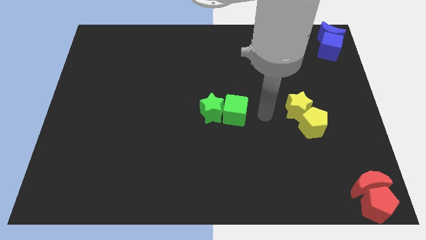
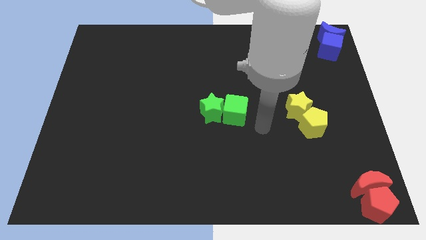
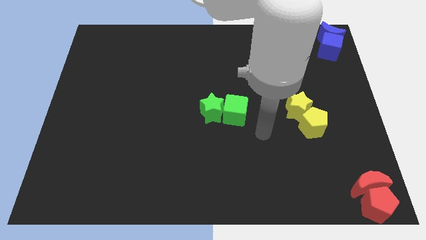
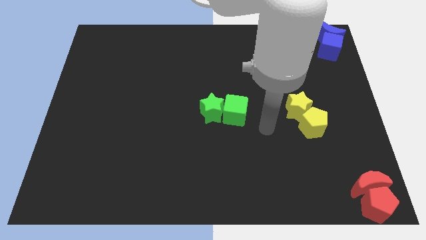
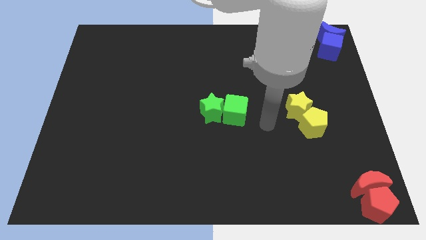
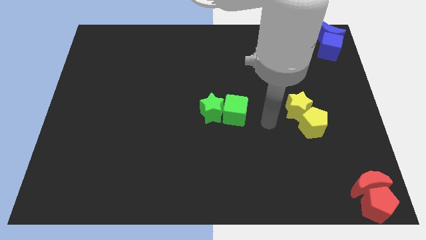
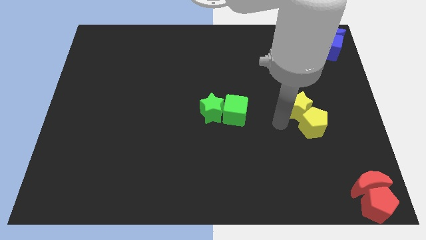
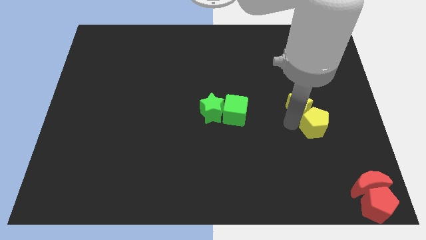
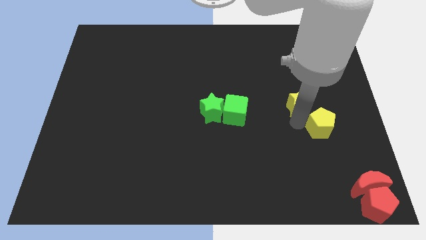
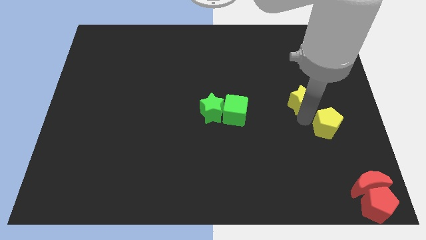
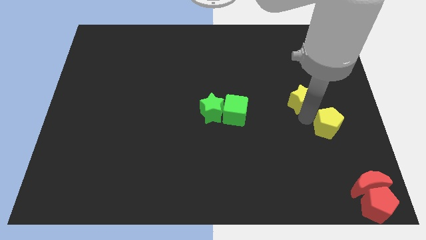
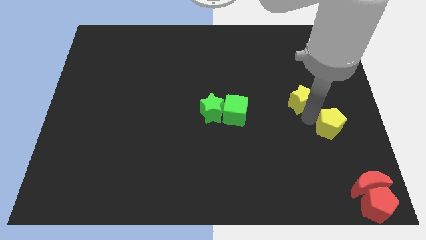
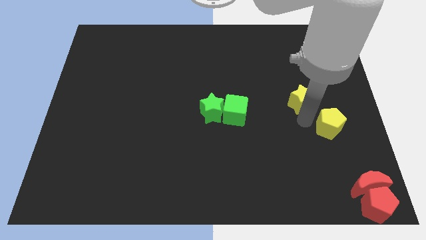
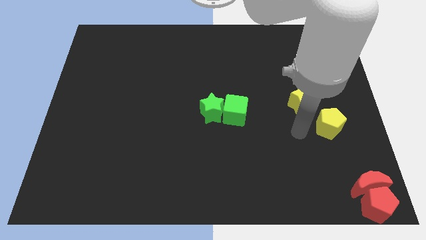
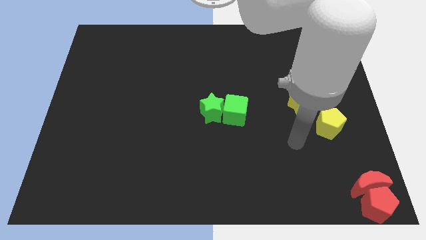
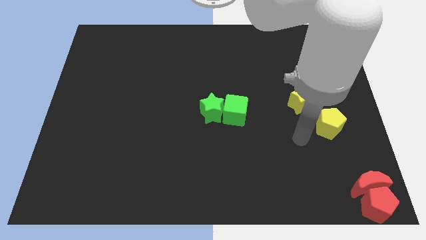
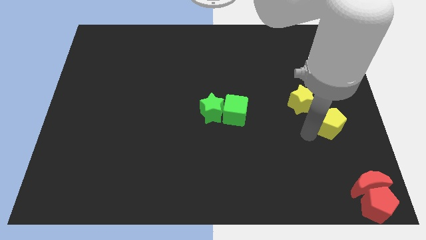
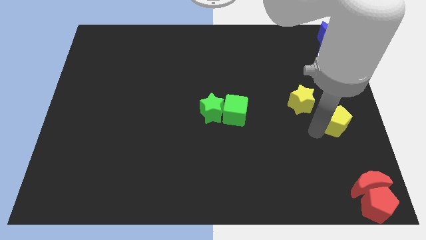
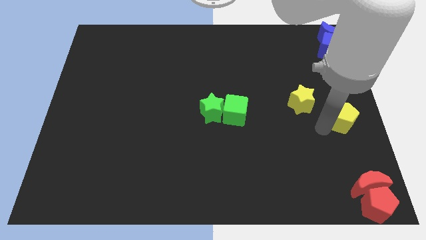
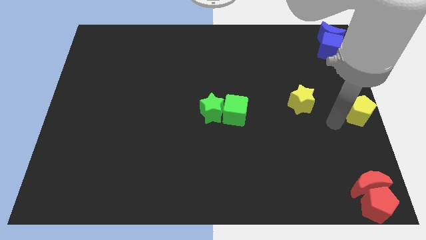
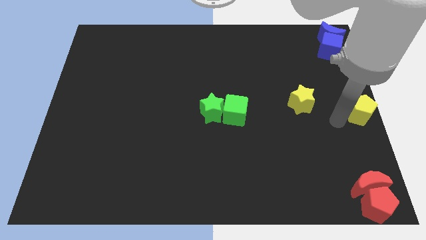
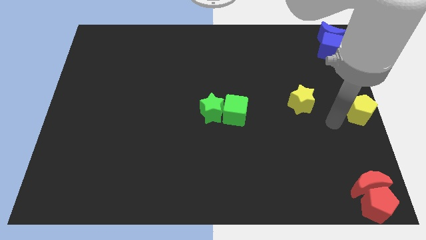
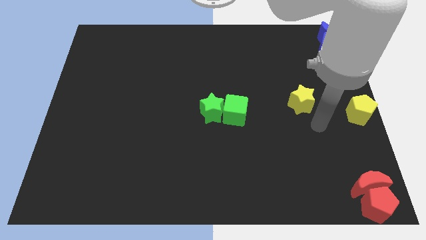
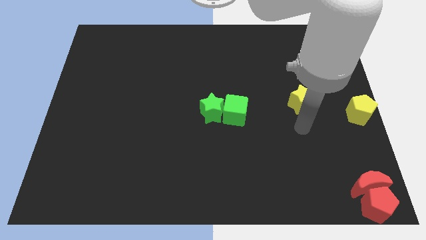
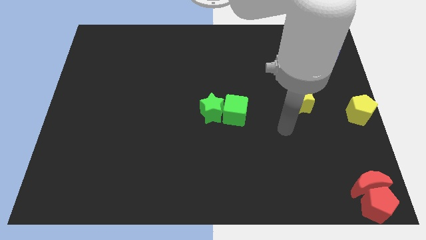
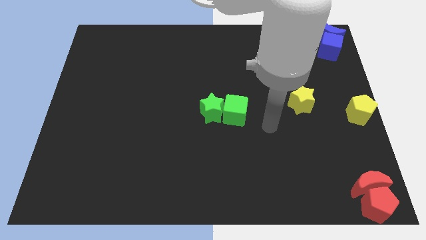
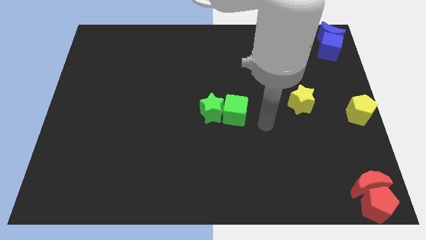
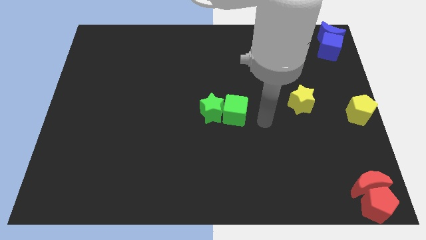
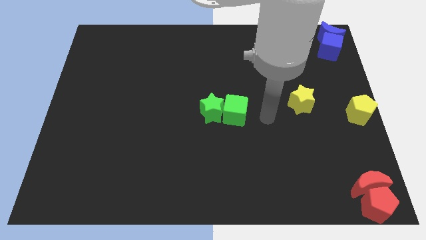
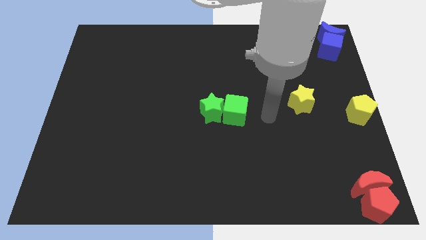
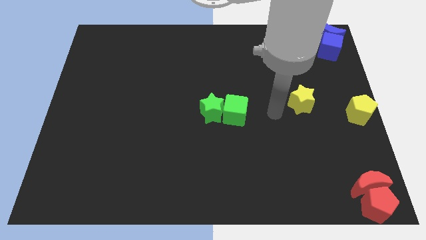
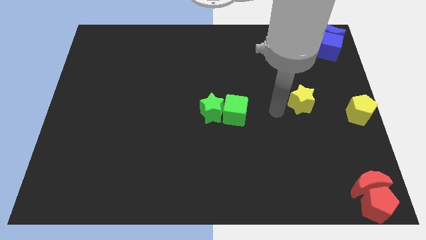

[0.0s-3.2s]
place the yellow pentagon at the center right side of the table

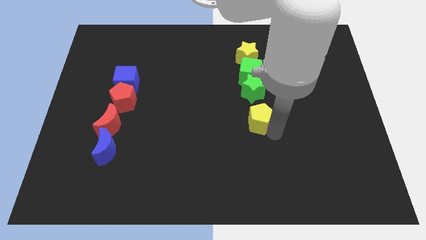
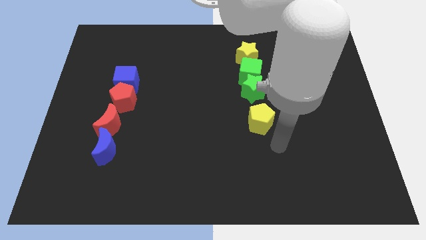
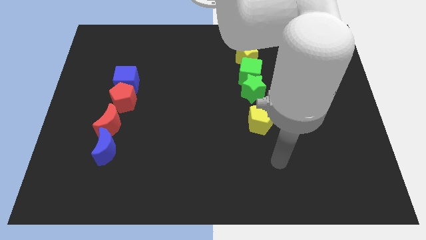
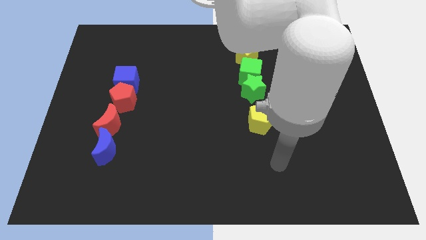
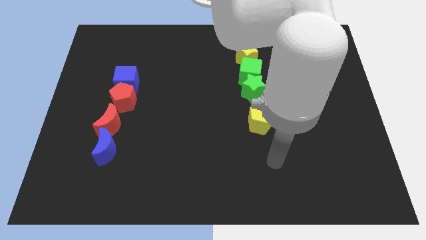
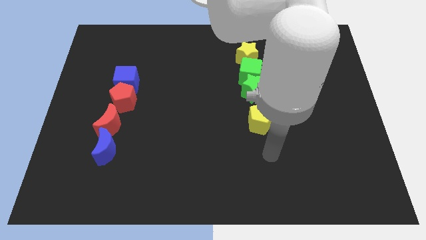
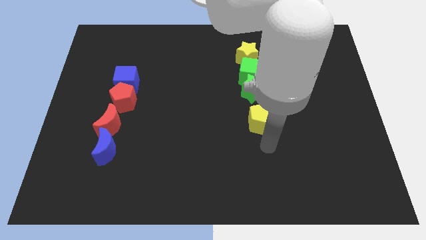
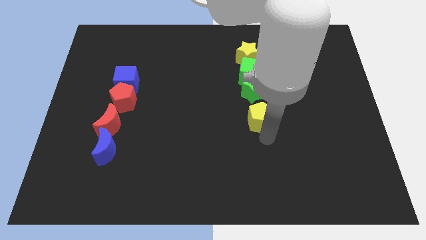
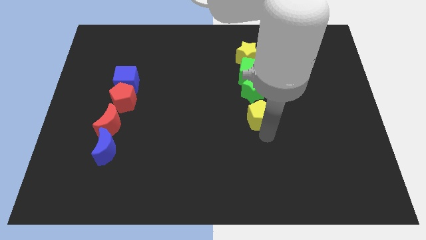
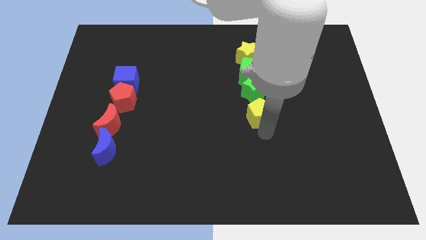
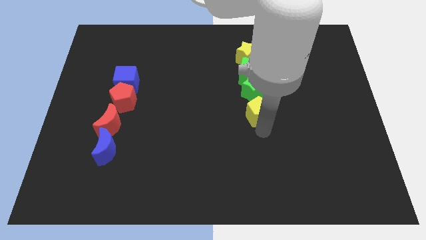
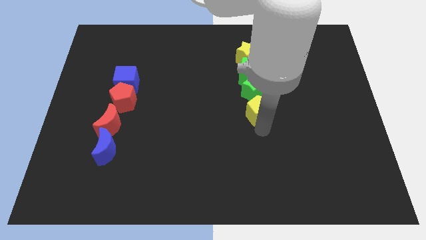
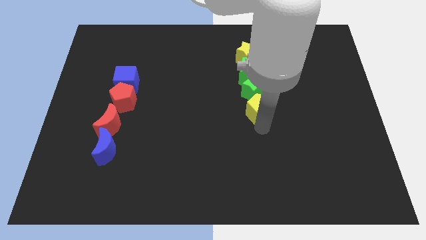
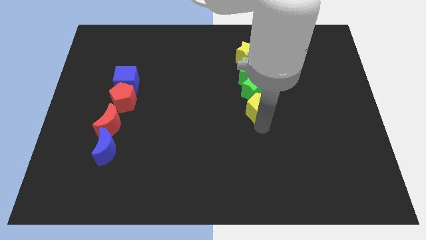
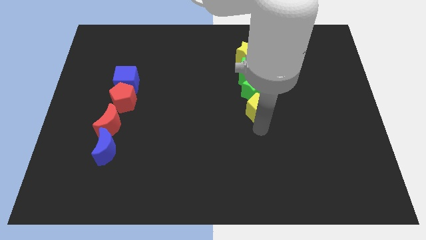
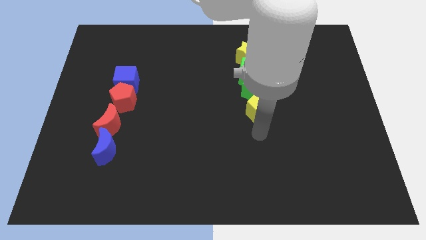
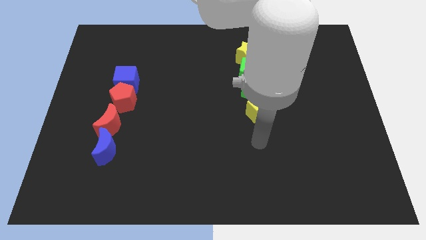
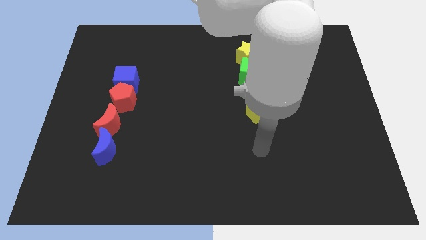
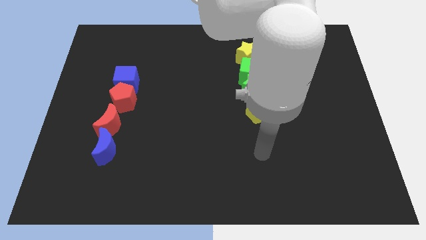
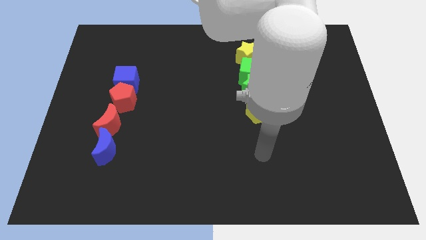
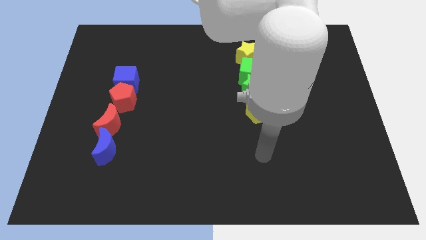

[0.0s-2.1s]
slide the yellow pentagon close to the green star

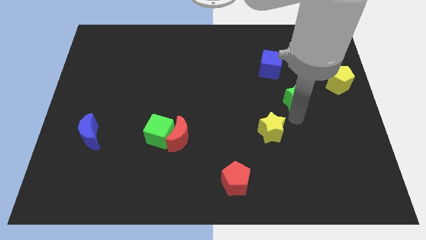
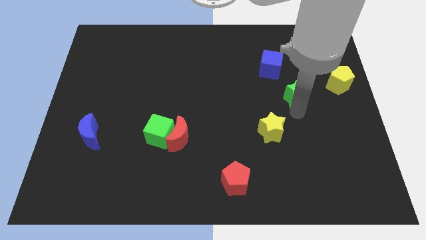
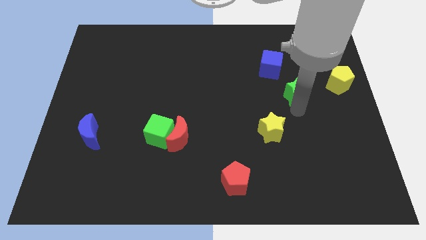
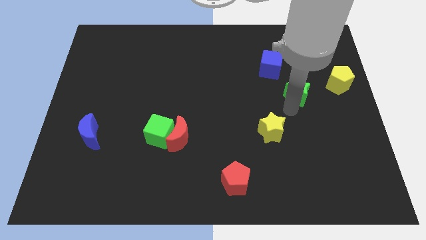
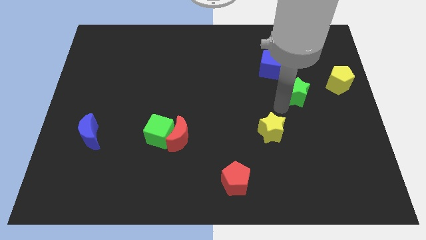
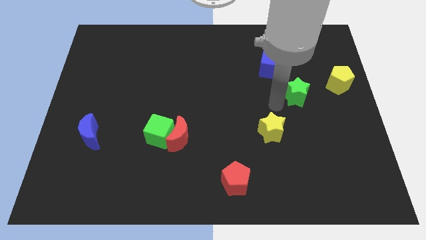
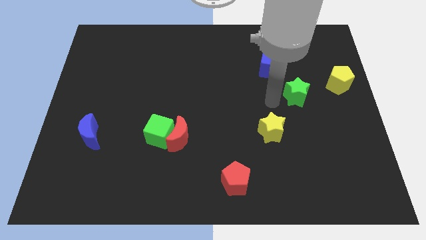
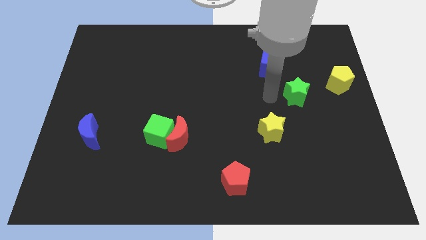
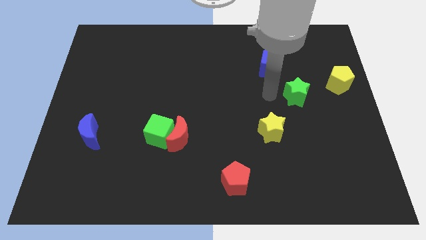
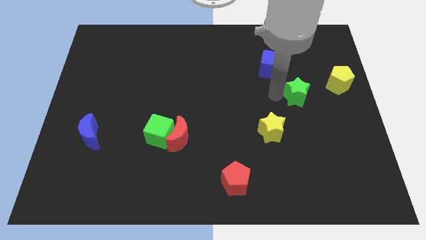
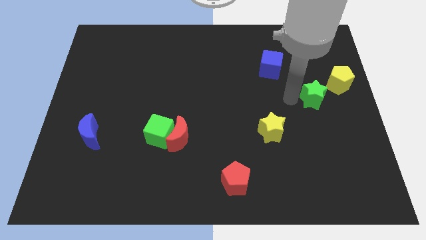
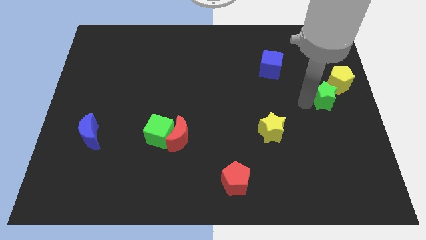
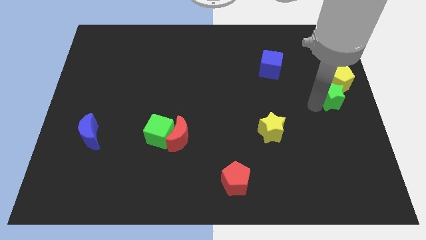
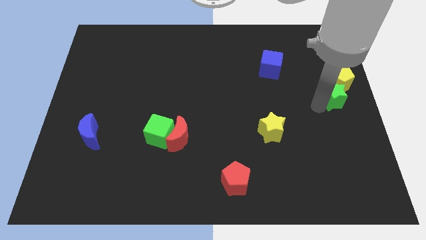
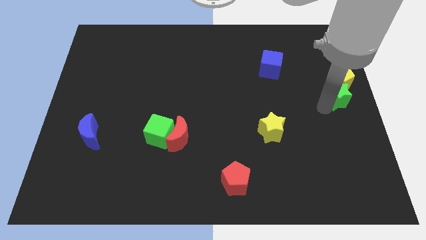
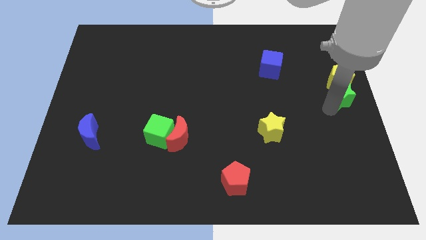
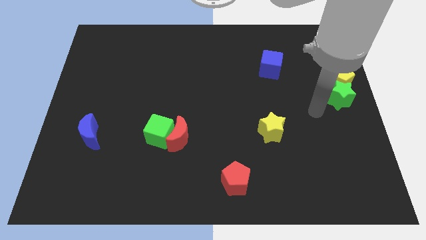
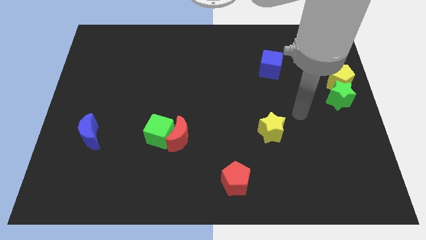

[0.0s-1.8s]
slide the green star to the bottom side of the yellow pentagon

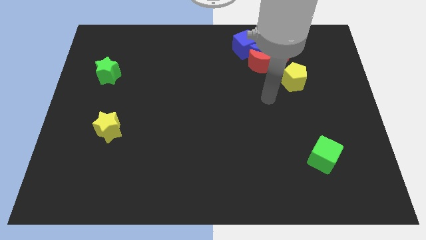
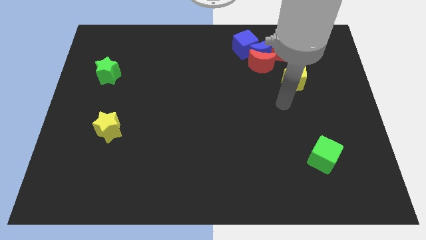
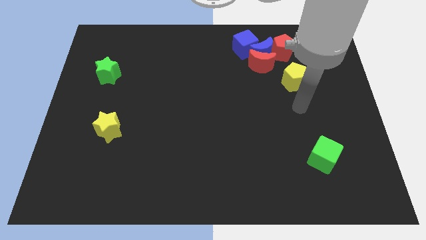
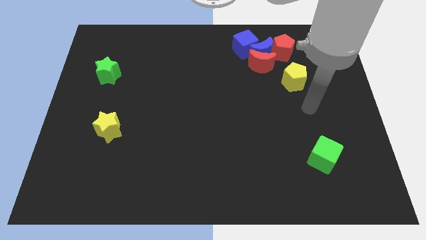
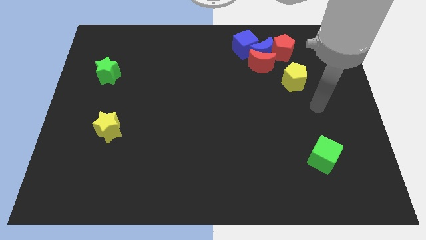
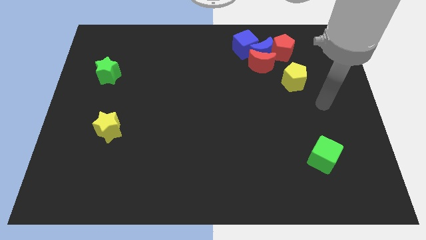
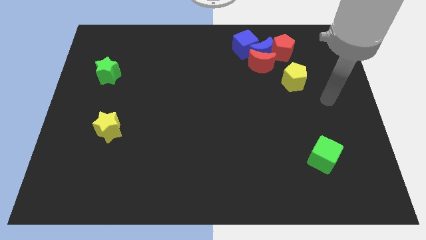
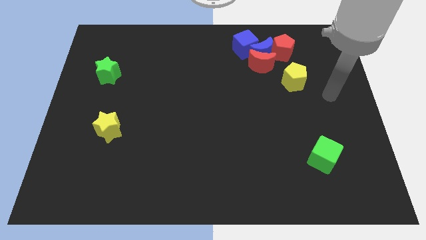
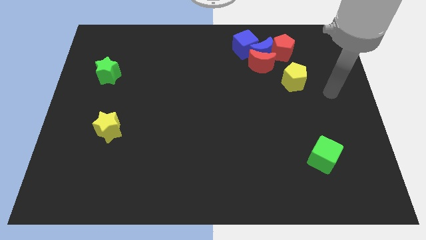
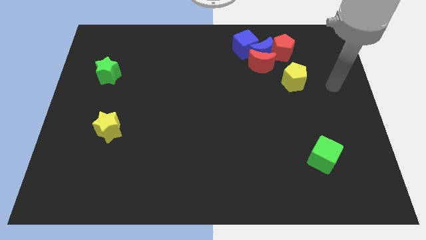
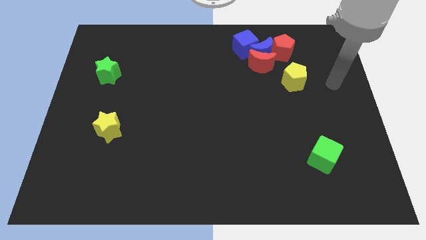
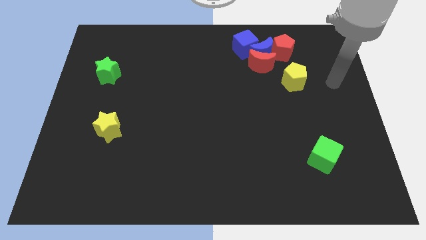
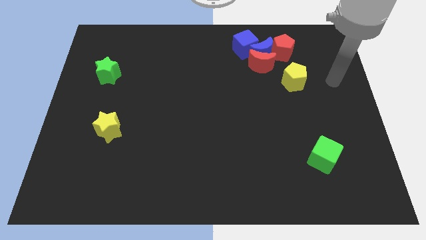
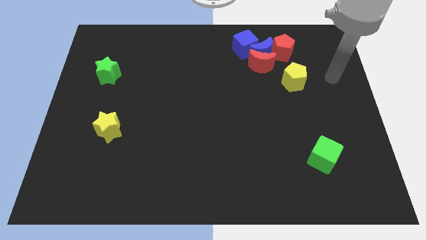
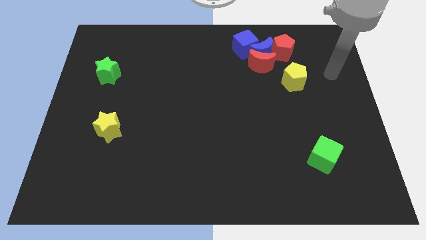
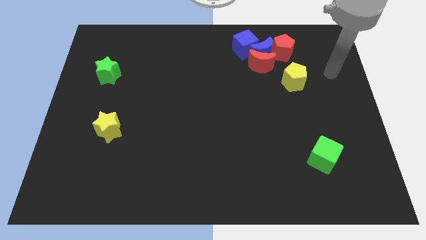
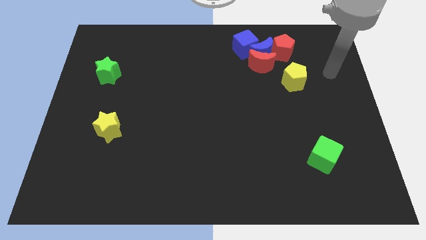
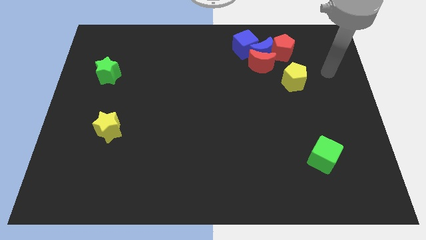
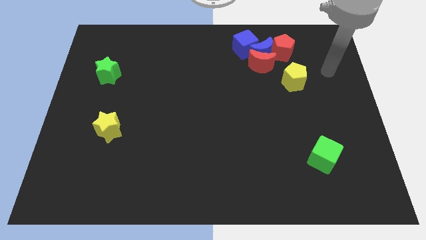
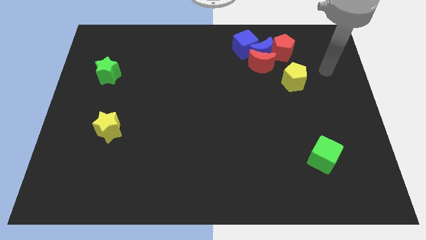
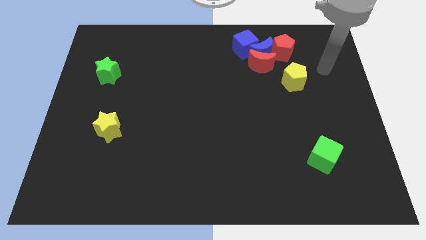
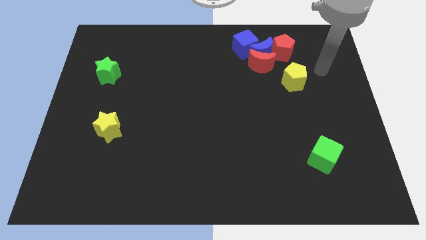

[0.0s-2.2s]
move robot arm towards red pentagon
